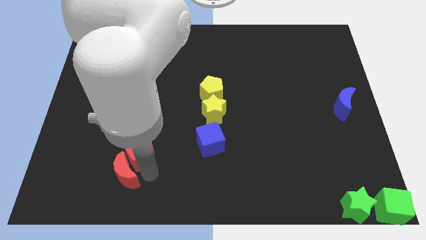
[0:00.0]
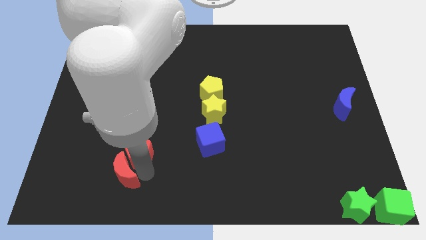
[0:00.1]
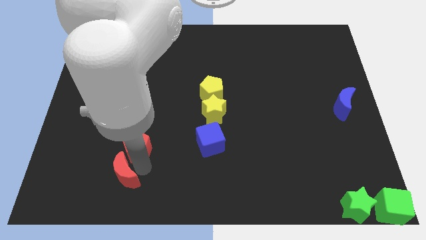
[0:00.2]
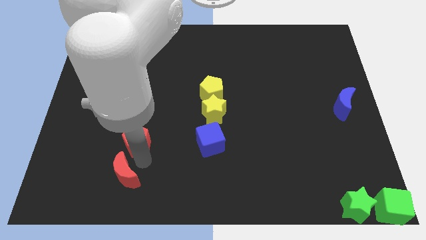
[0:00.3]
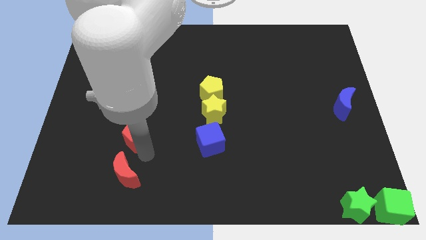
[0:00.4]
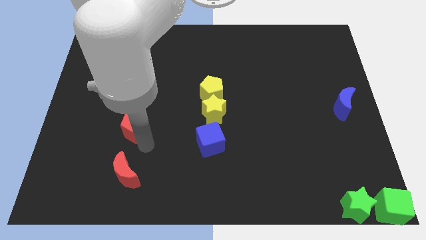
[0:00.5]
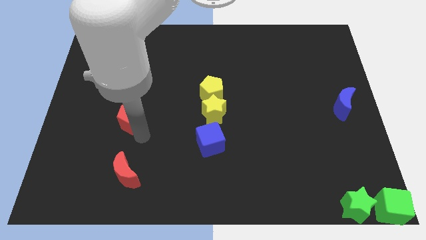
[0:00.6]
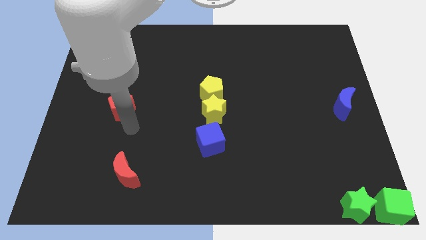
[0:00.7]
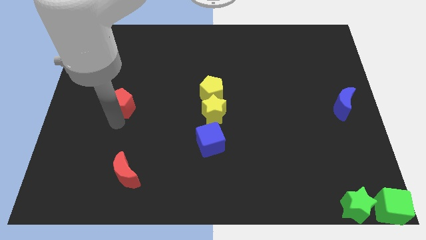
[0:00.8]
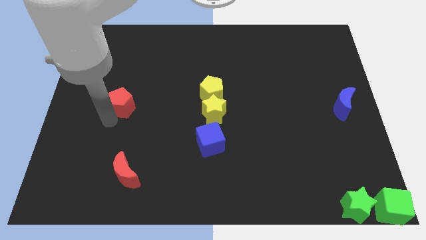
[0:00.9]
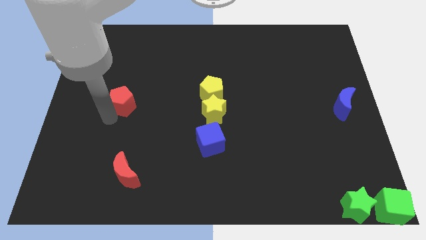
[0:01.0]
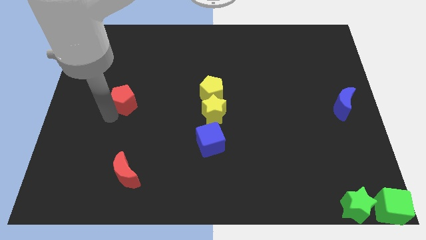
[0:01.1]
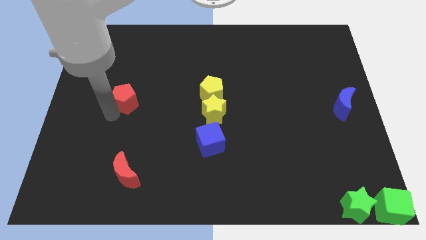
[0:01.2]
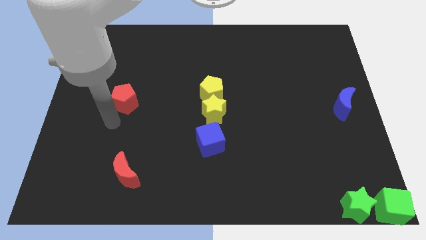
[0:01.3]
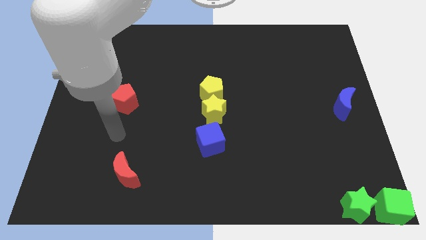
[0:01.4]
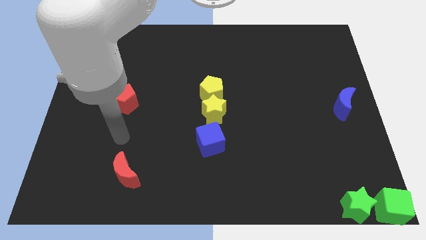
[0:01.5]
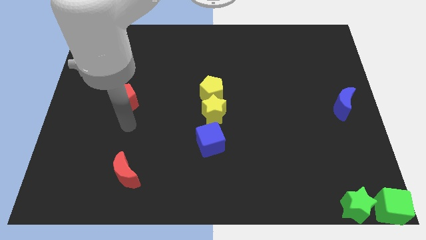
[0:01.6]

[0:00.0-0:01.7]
separate red pentagon from the red moon

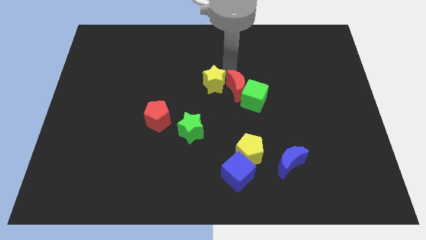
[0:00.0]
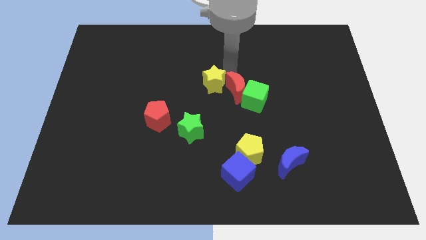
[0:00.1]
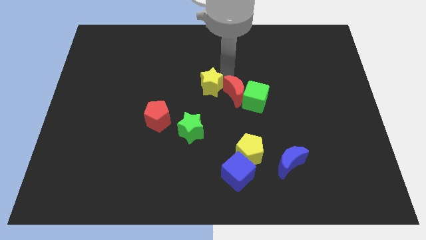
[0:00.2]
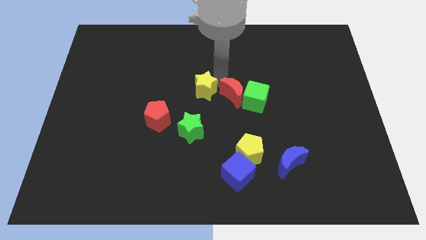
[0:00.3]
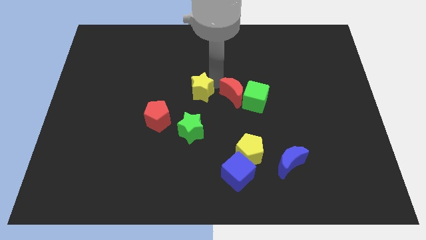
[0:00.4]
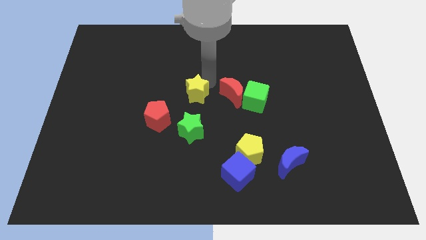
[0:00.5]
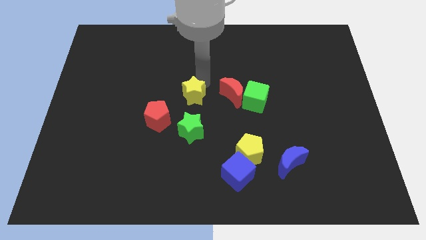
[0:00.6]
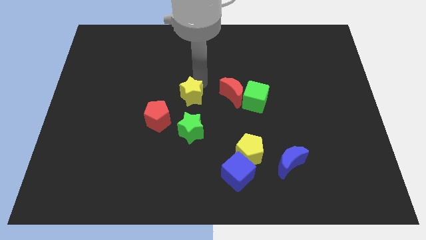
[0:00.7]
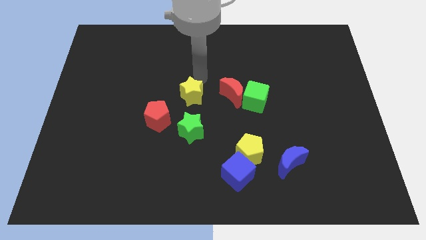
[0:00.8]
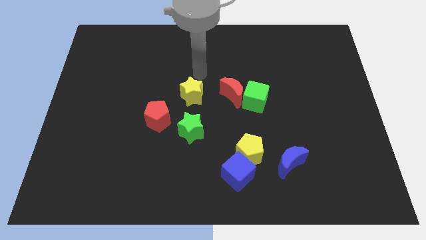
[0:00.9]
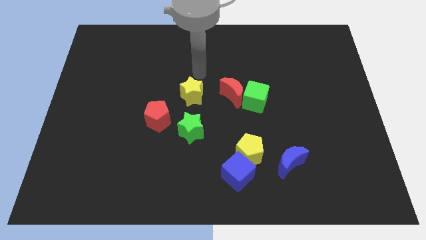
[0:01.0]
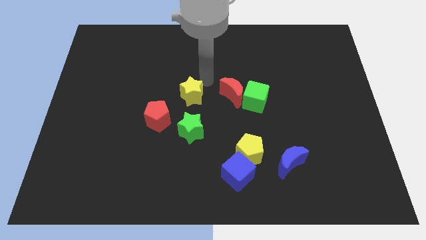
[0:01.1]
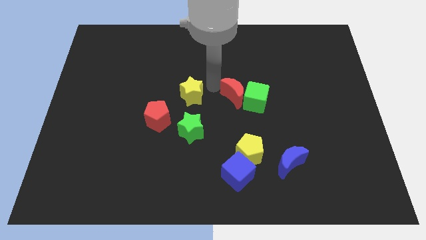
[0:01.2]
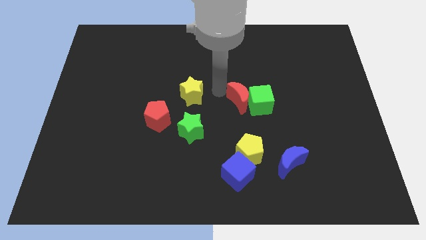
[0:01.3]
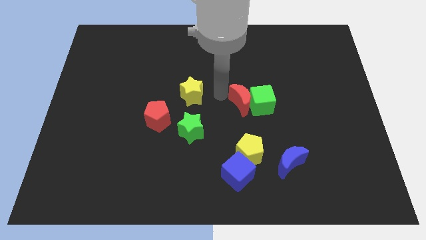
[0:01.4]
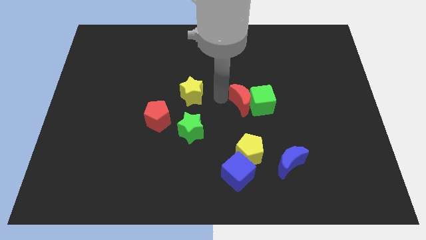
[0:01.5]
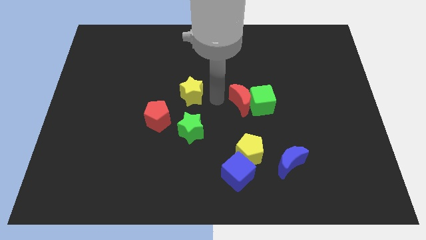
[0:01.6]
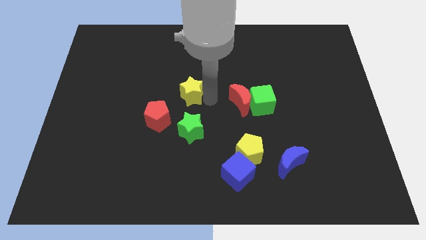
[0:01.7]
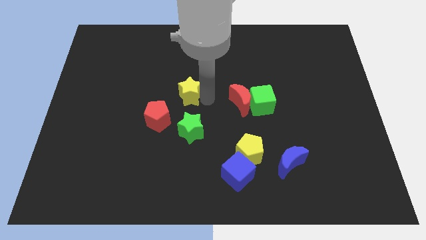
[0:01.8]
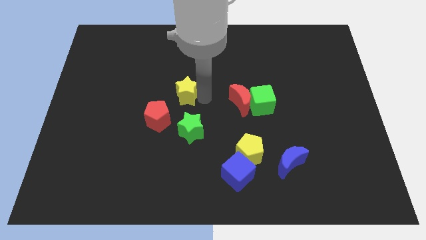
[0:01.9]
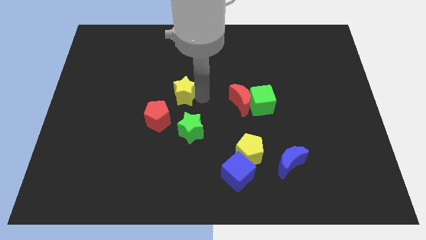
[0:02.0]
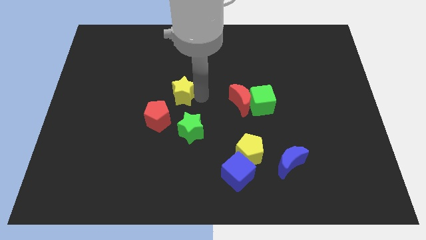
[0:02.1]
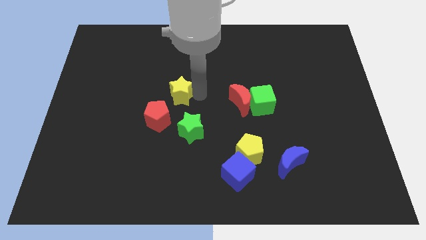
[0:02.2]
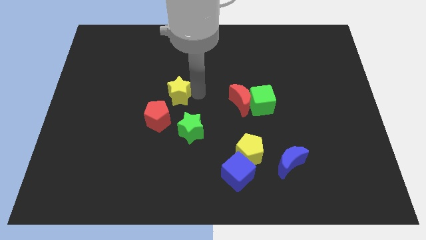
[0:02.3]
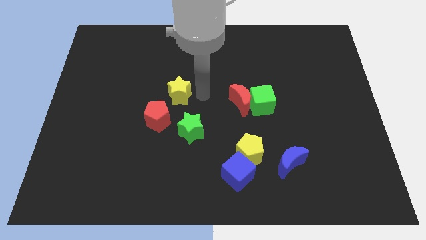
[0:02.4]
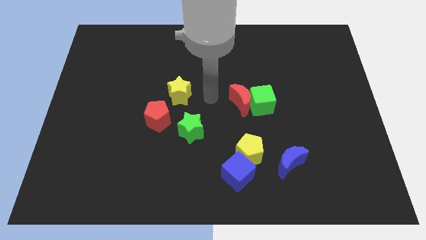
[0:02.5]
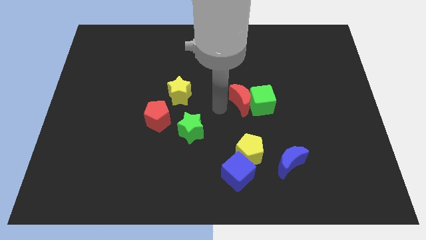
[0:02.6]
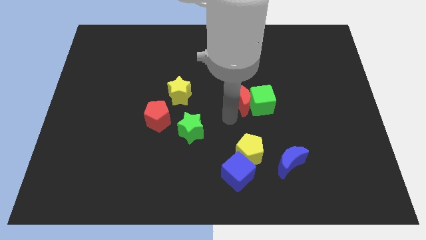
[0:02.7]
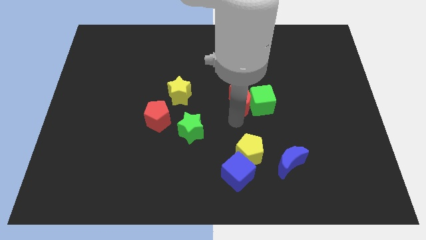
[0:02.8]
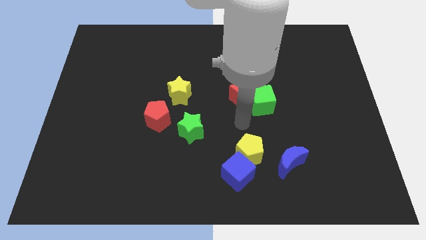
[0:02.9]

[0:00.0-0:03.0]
put the yellow star diagonal to the yellow pentagon

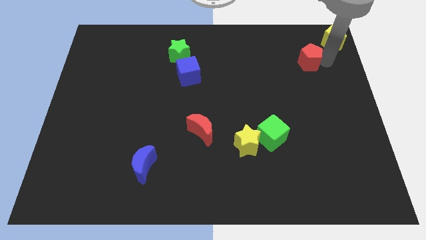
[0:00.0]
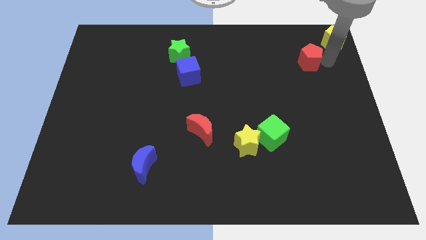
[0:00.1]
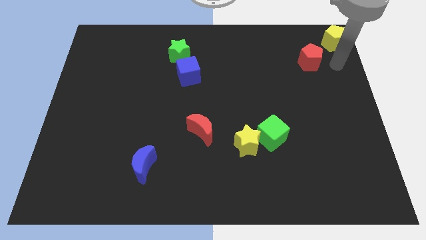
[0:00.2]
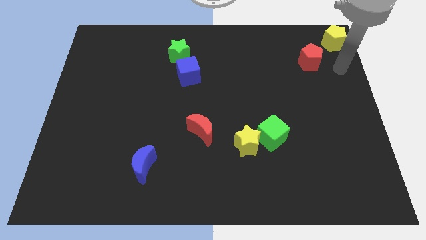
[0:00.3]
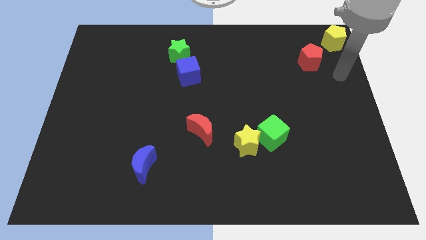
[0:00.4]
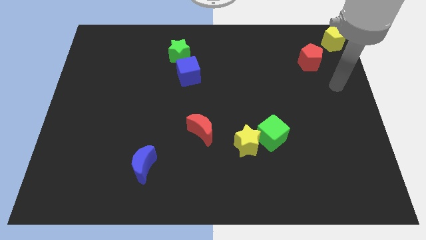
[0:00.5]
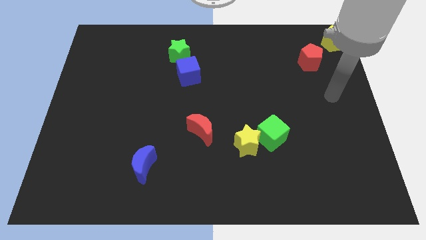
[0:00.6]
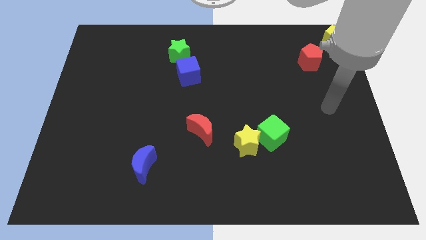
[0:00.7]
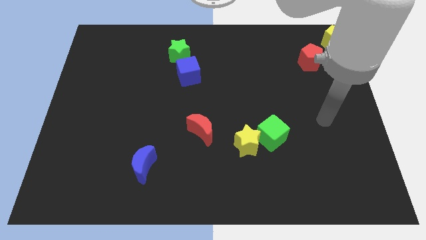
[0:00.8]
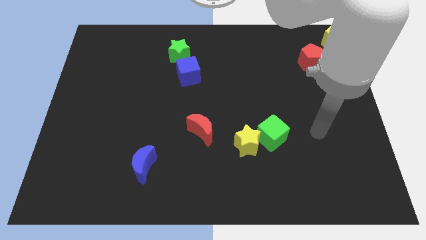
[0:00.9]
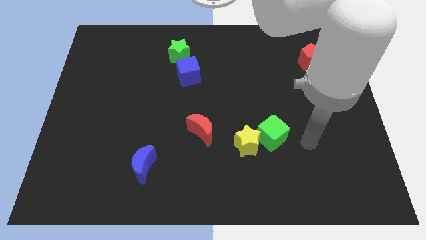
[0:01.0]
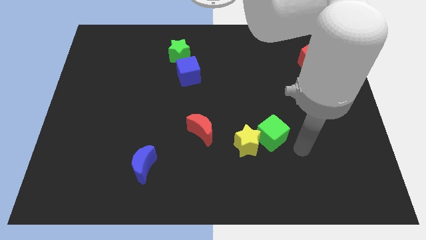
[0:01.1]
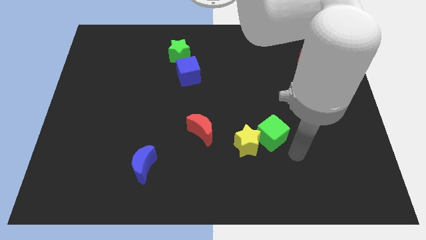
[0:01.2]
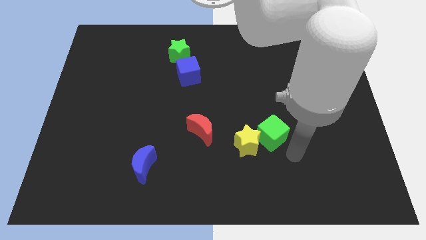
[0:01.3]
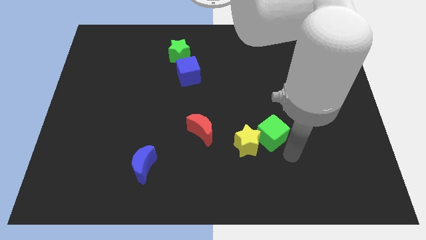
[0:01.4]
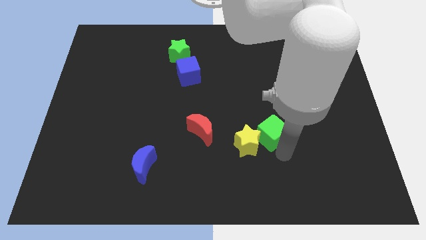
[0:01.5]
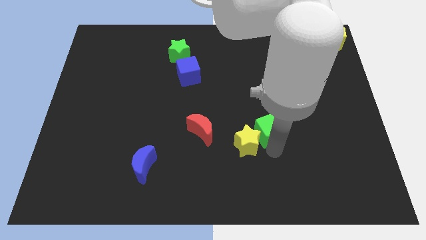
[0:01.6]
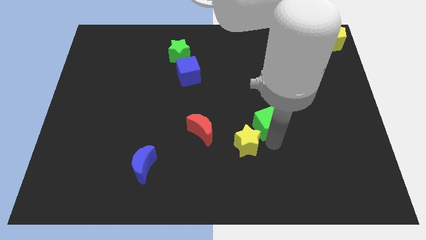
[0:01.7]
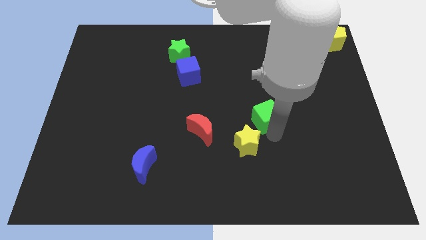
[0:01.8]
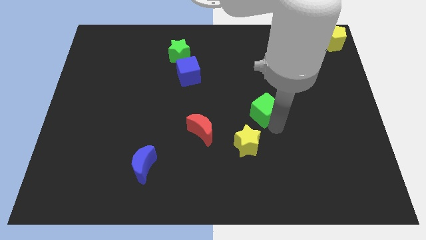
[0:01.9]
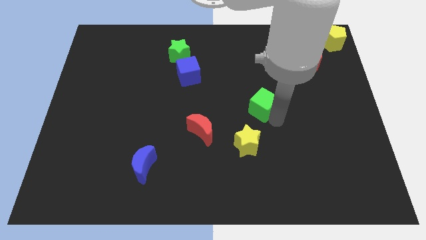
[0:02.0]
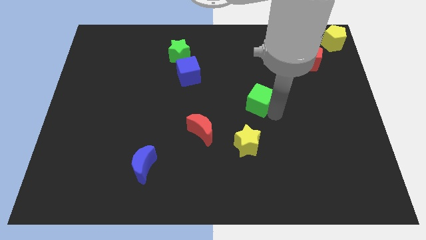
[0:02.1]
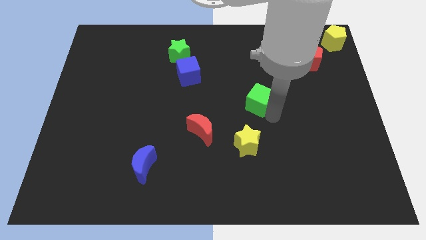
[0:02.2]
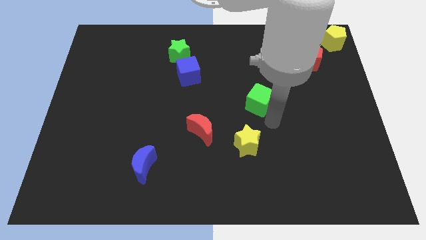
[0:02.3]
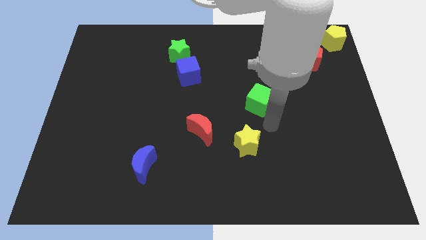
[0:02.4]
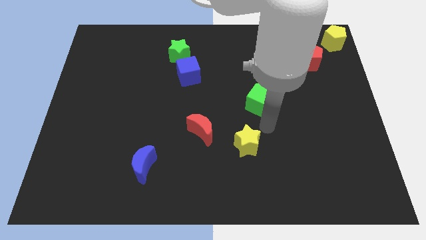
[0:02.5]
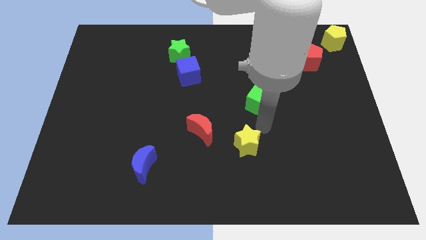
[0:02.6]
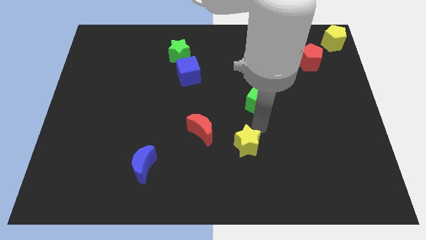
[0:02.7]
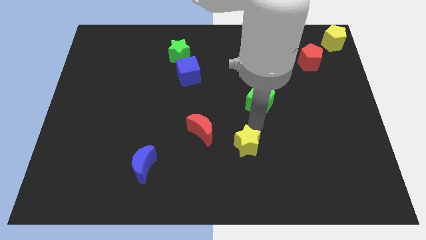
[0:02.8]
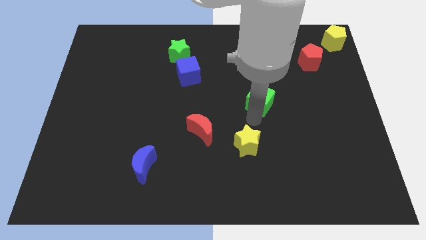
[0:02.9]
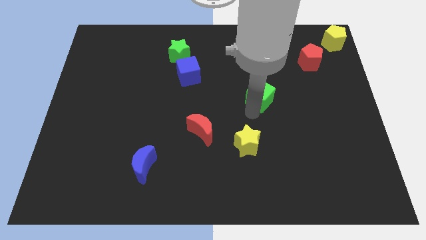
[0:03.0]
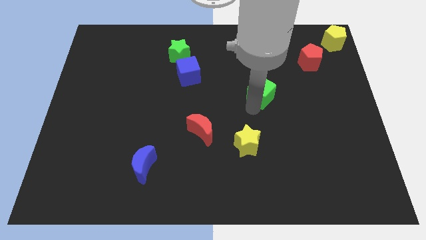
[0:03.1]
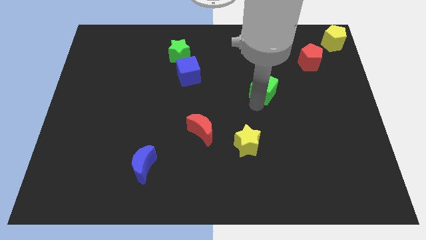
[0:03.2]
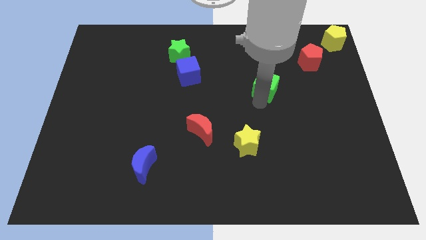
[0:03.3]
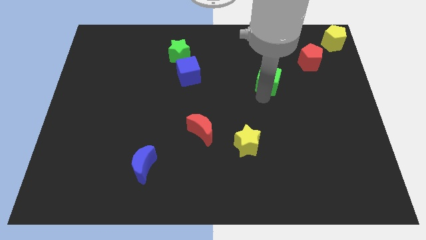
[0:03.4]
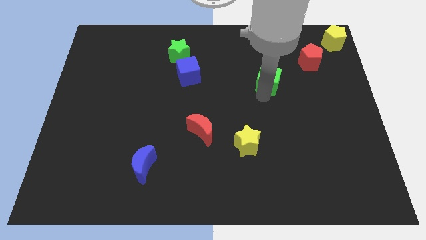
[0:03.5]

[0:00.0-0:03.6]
push the green cube away from the yellow star

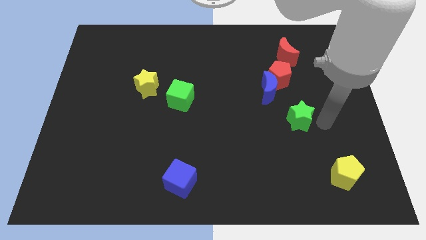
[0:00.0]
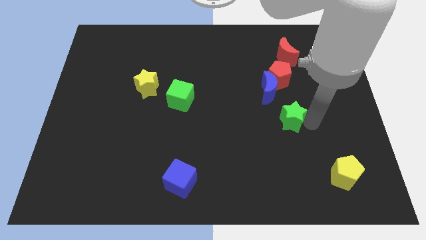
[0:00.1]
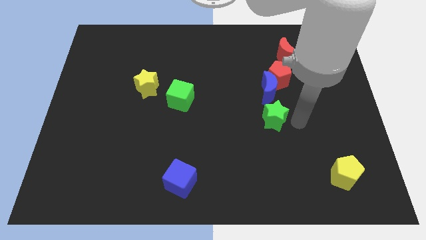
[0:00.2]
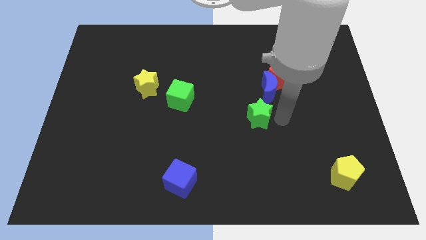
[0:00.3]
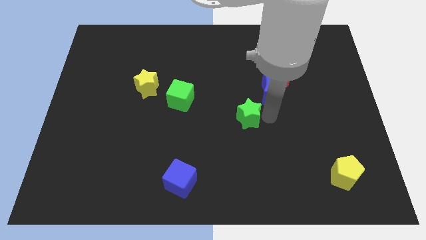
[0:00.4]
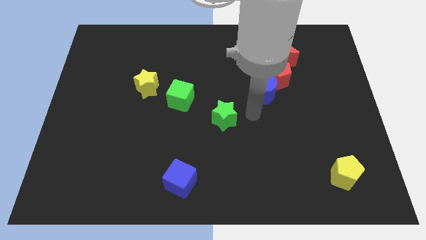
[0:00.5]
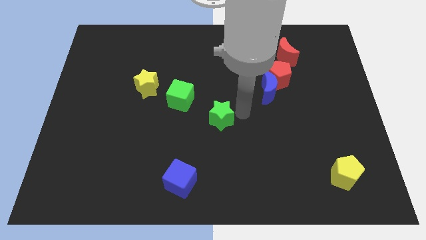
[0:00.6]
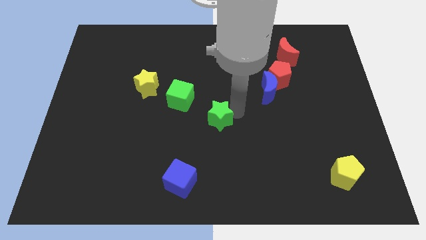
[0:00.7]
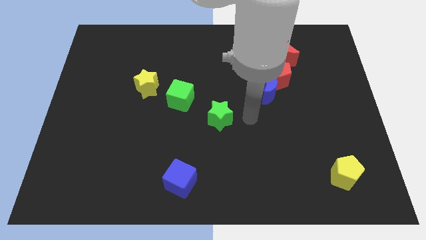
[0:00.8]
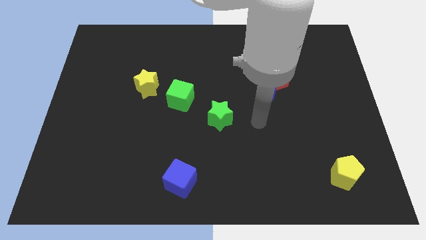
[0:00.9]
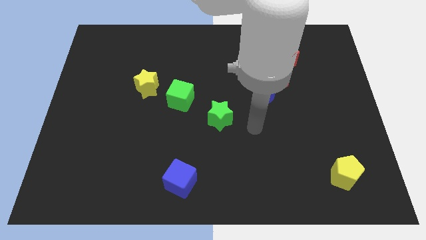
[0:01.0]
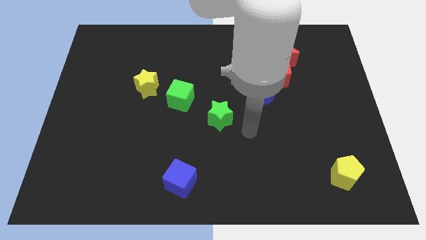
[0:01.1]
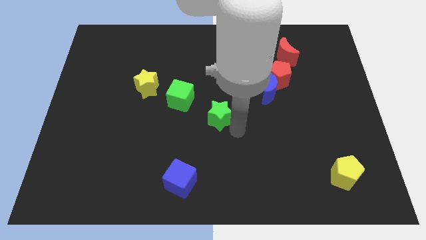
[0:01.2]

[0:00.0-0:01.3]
slide the green star diagonally bottom left to the blue moon
